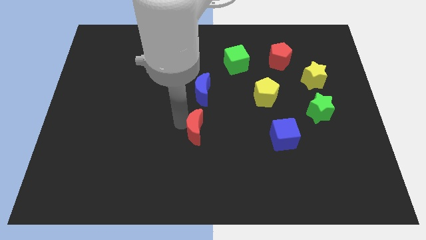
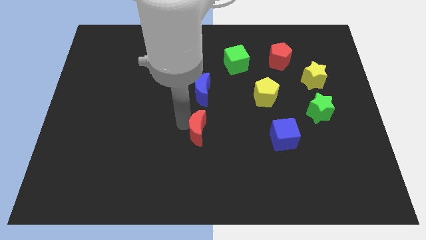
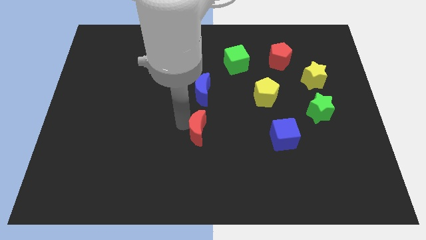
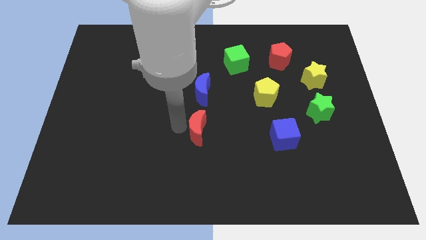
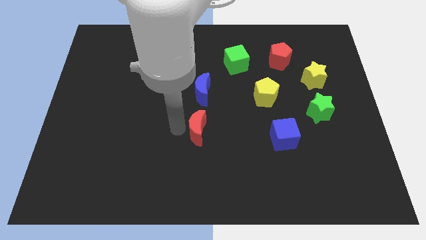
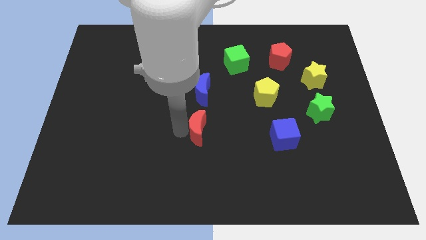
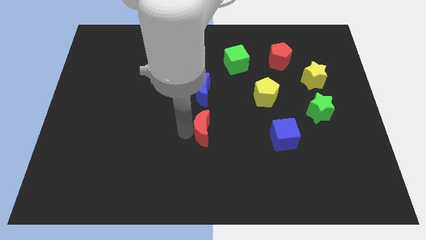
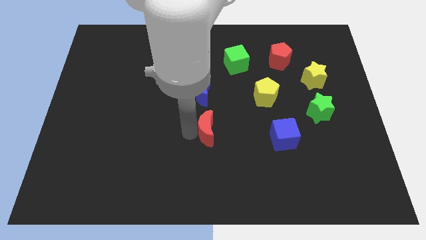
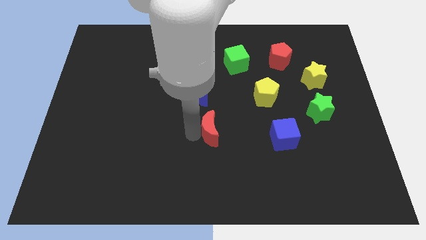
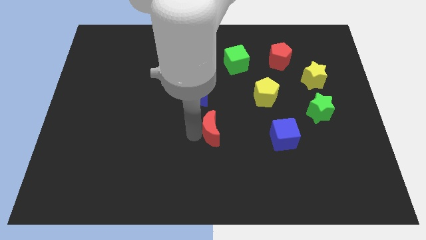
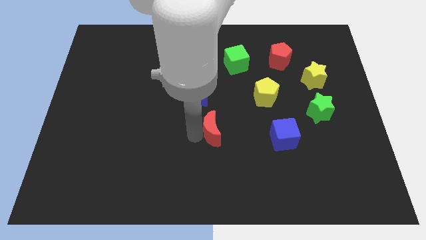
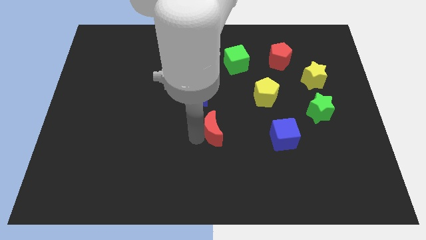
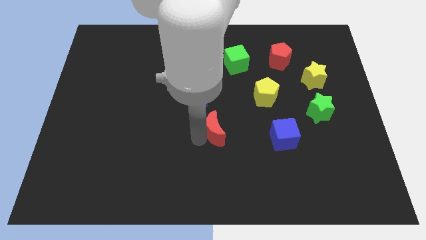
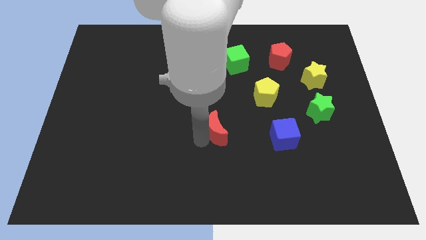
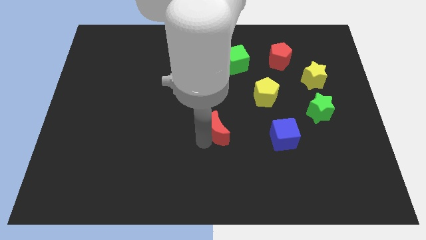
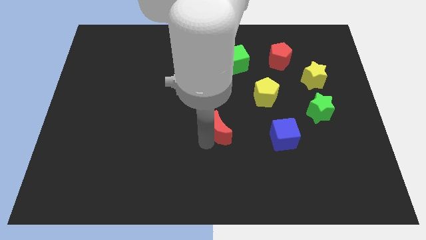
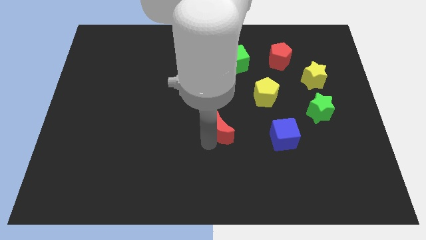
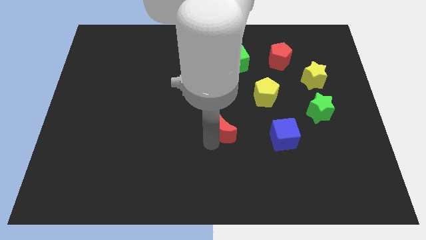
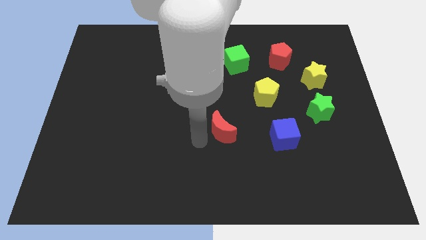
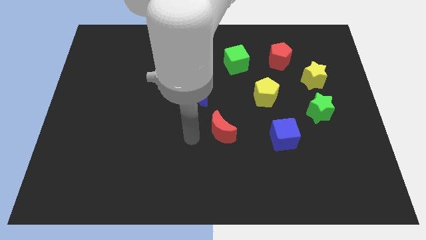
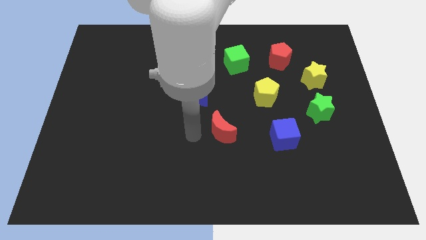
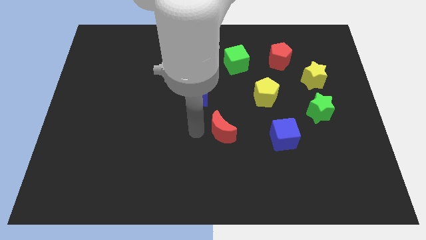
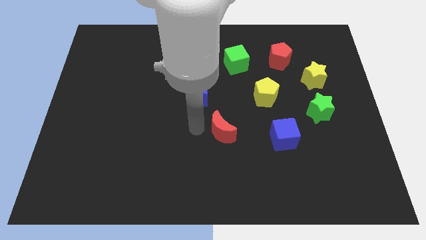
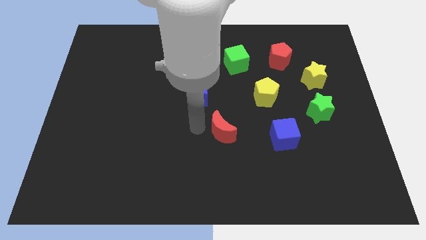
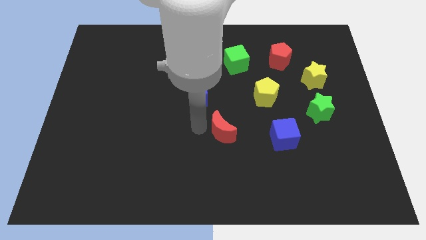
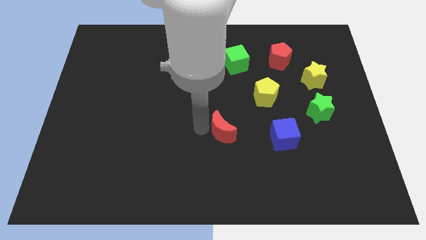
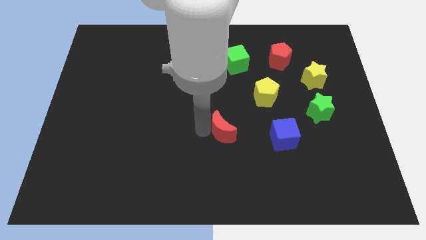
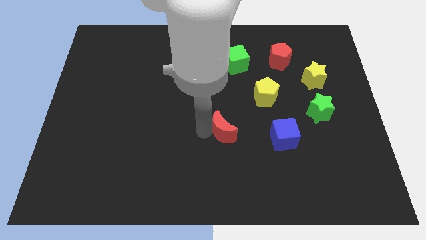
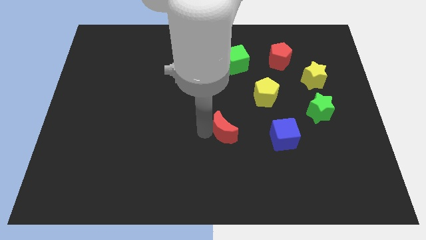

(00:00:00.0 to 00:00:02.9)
push the red moon to the right

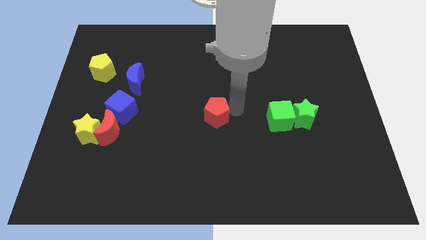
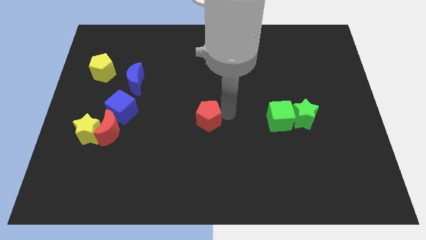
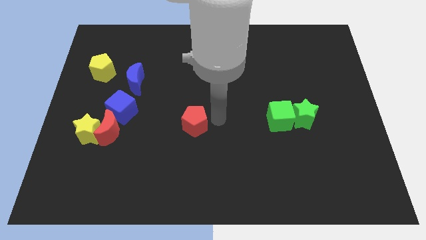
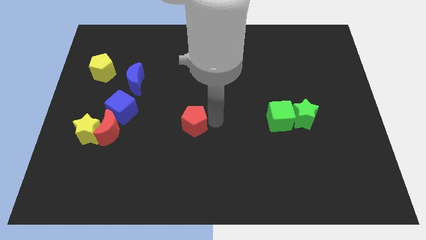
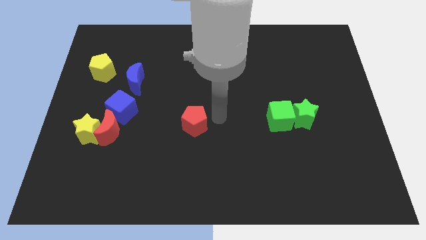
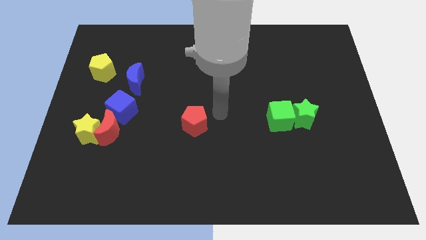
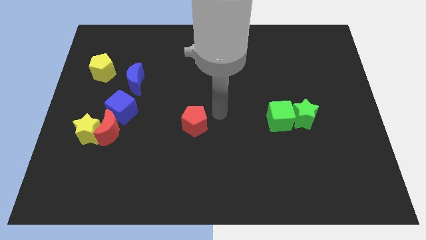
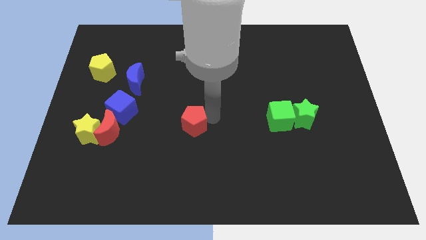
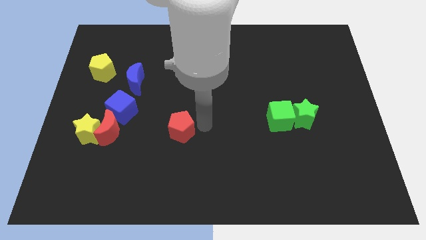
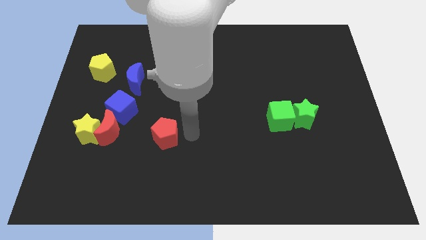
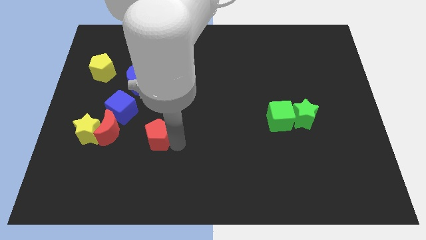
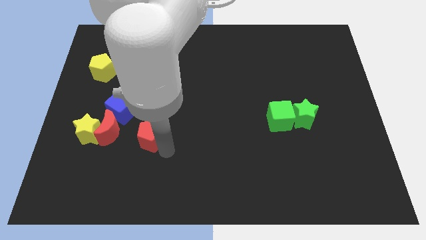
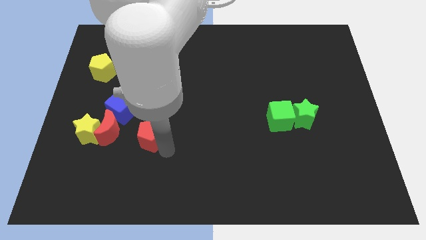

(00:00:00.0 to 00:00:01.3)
push the red pentagon slightly downwards

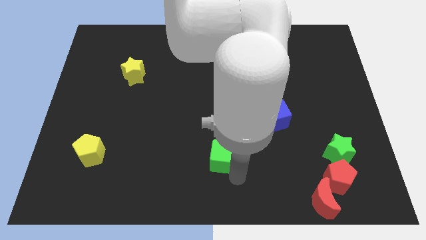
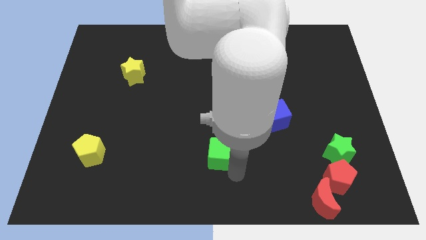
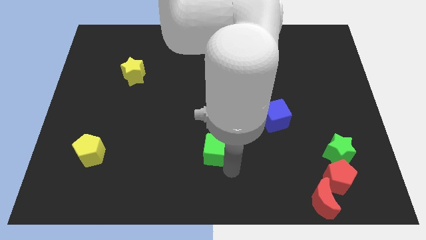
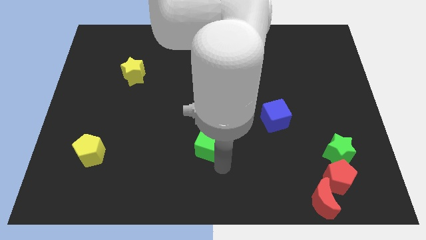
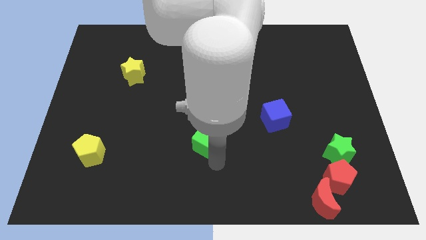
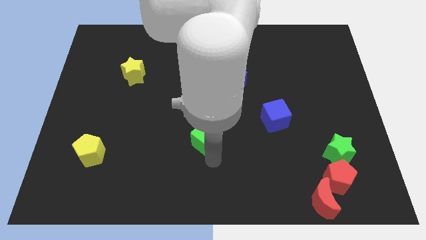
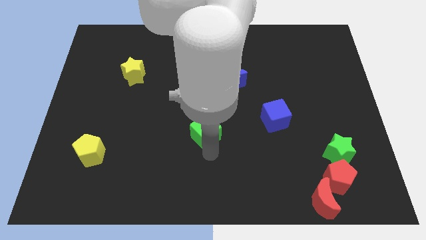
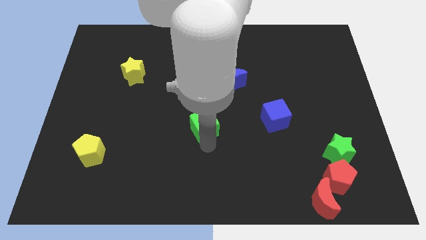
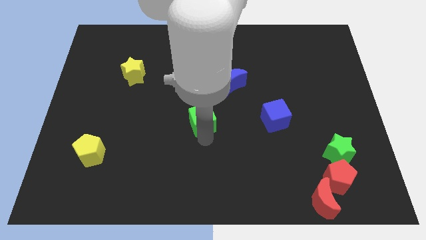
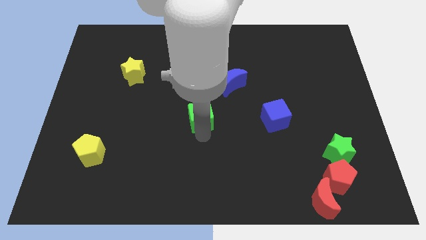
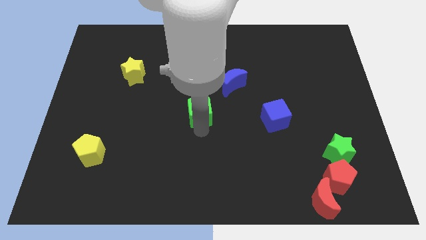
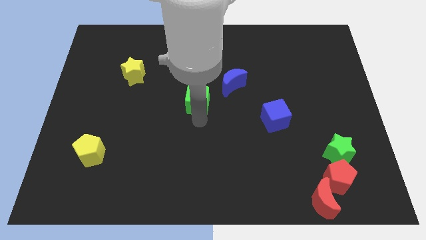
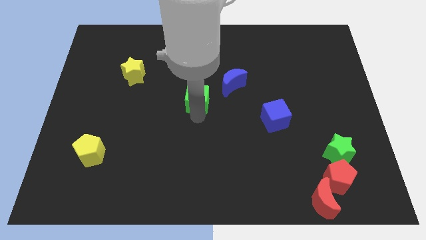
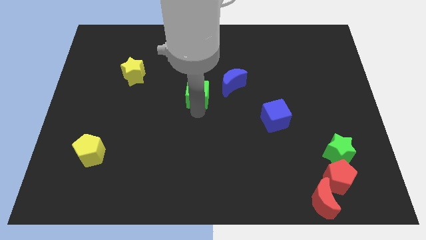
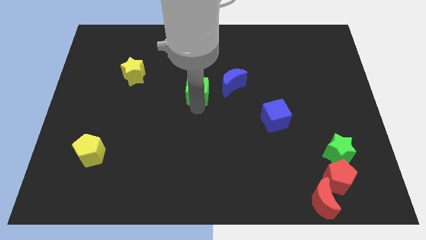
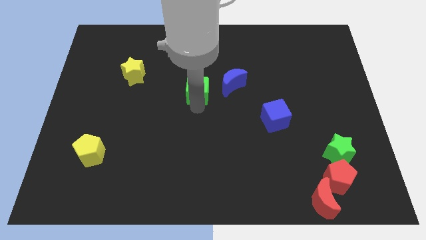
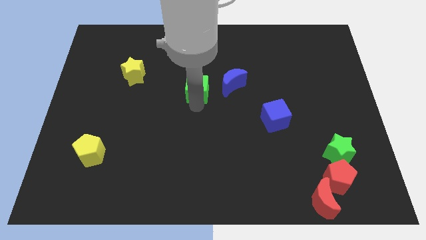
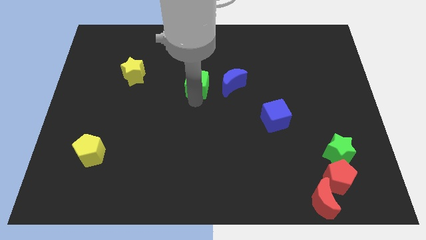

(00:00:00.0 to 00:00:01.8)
push the green cube to the left side of the blue moon

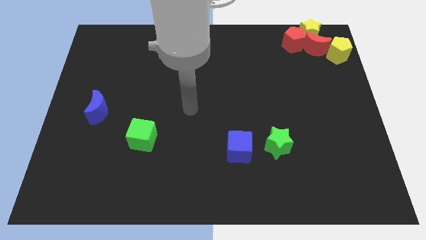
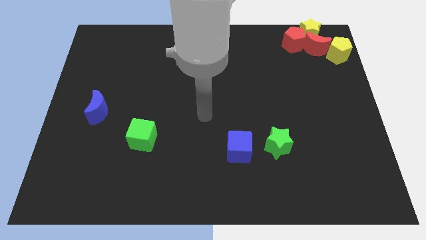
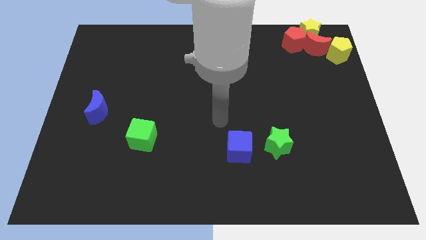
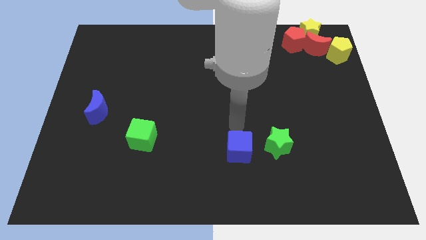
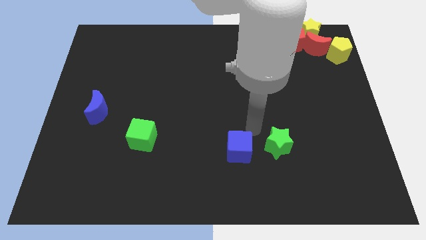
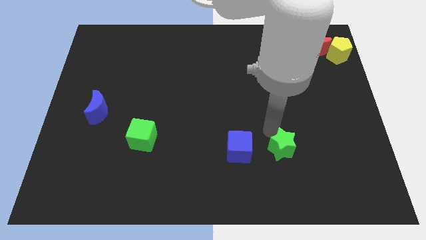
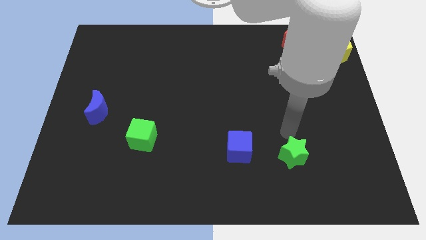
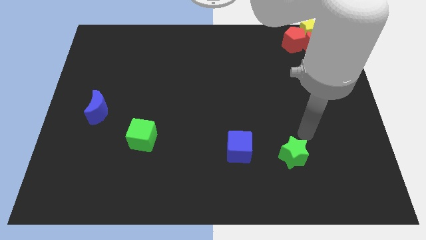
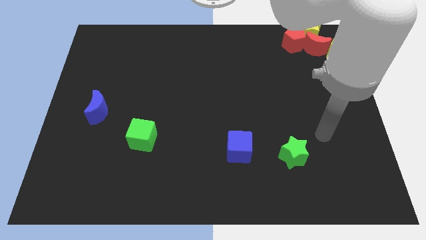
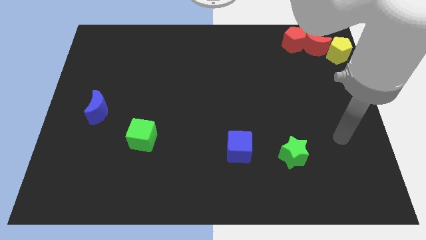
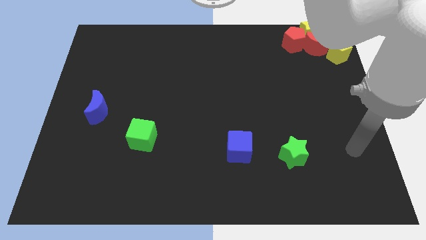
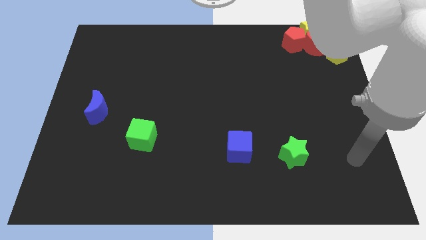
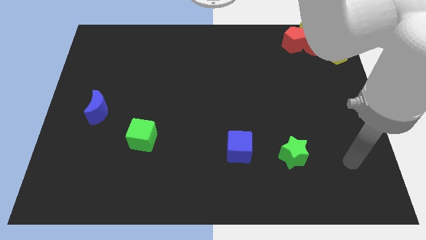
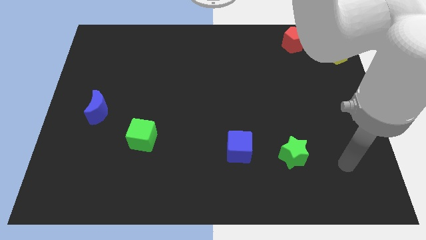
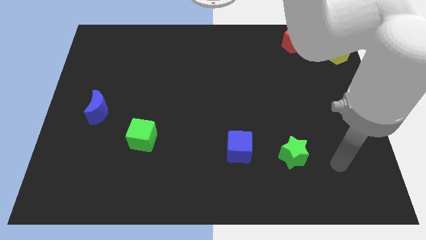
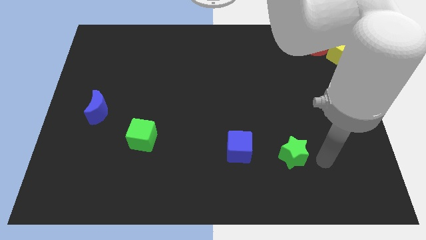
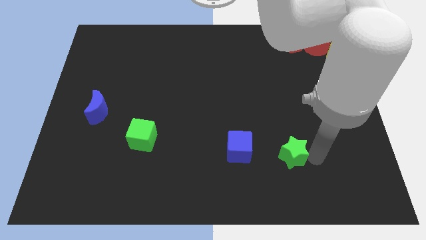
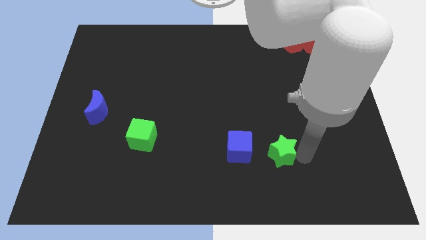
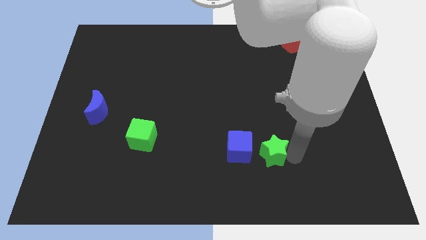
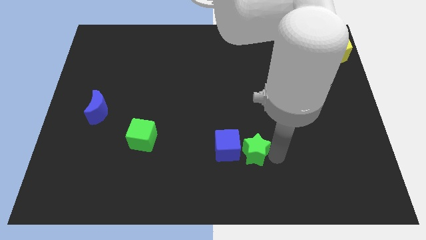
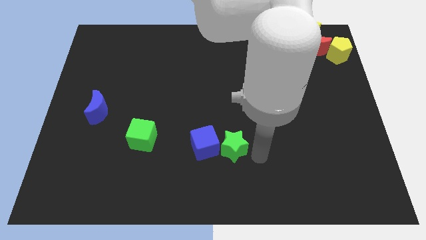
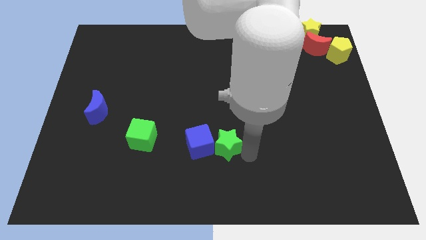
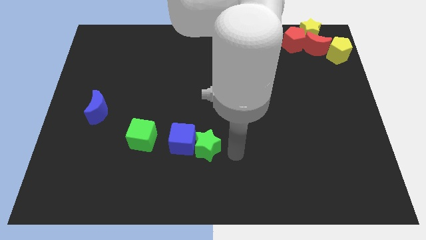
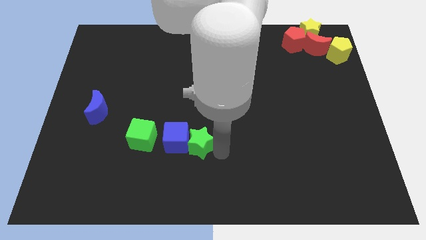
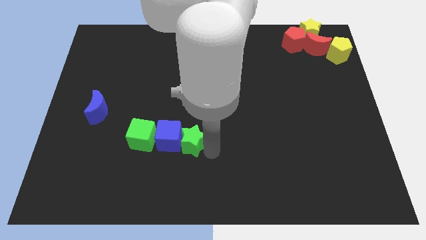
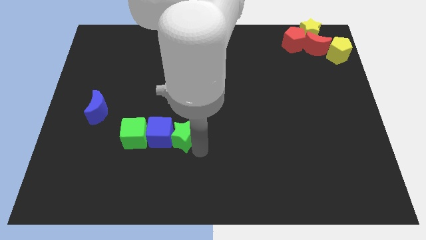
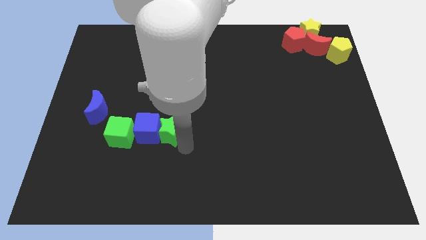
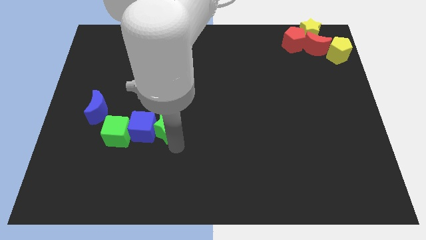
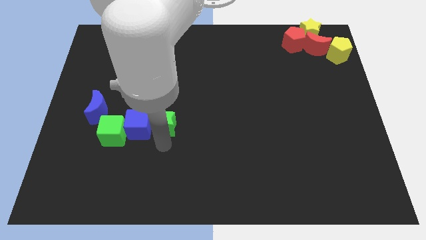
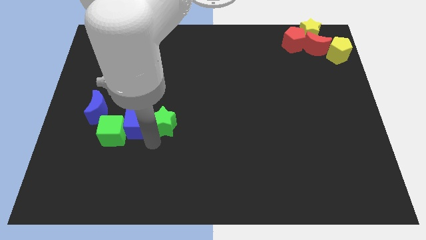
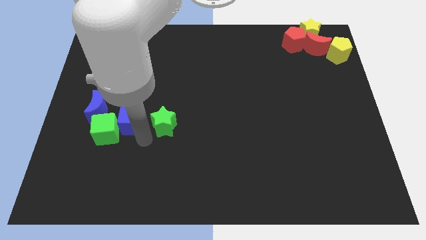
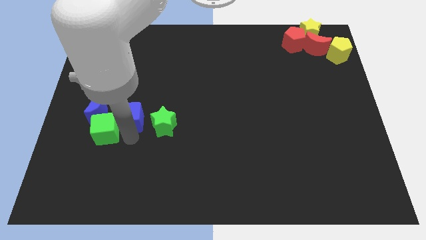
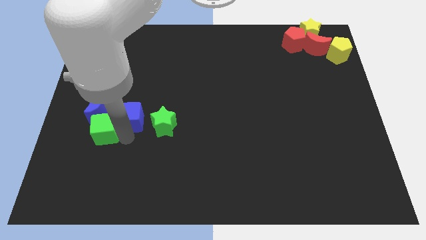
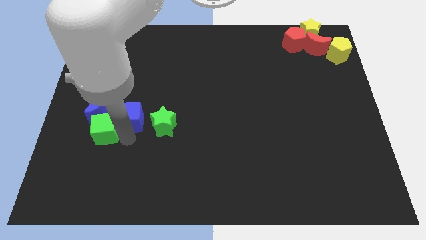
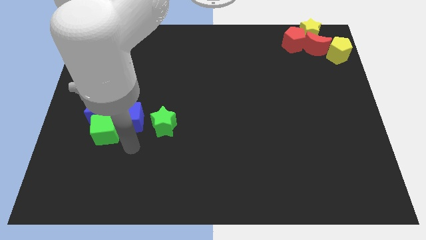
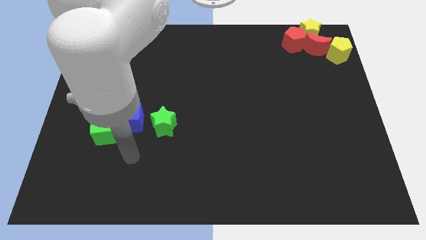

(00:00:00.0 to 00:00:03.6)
push the green star into the blue cube
